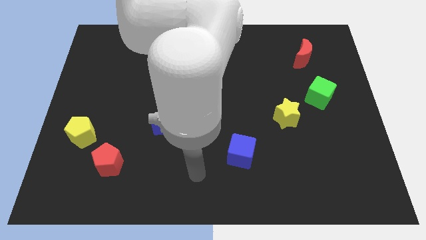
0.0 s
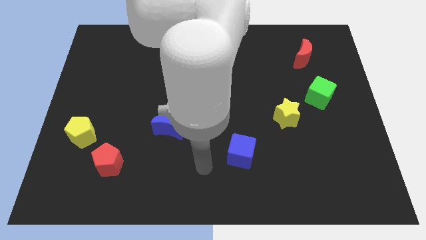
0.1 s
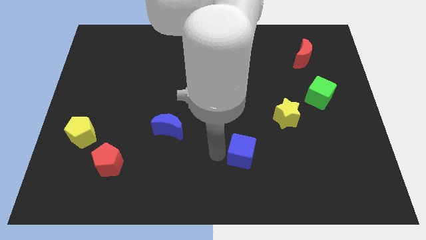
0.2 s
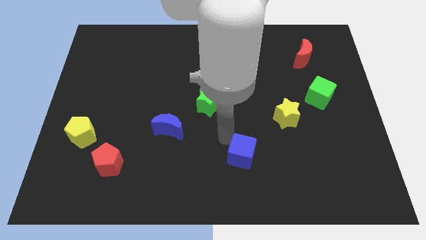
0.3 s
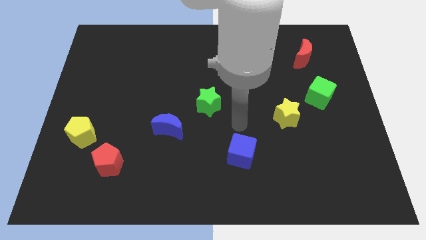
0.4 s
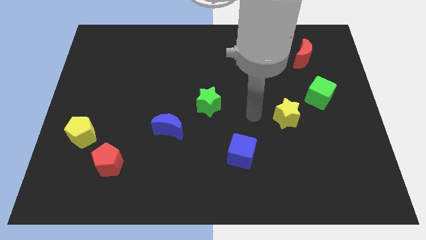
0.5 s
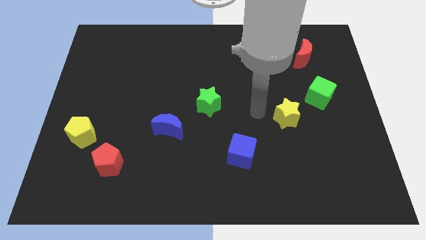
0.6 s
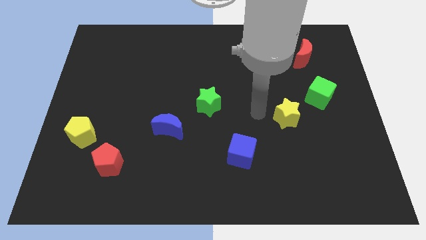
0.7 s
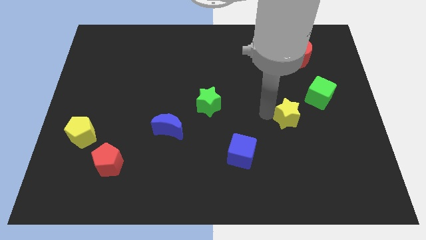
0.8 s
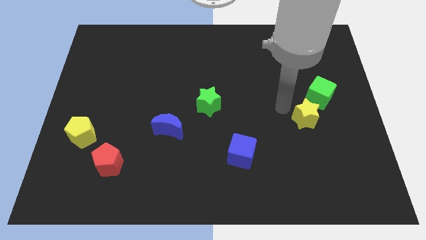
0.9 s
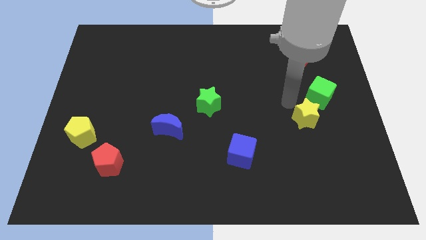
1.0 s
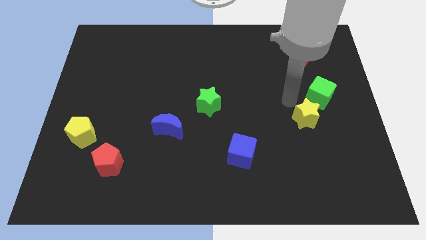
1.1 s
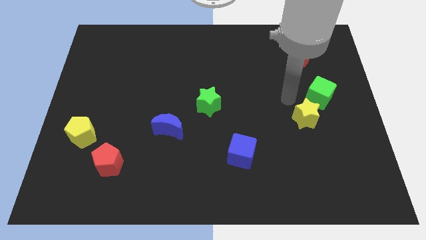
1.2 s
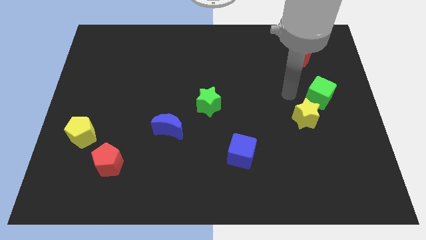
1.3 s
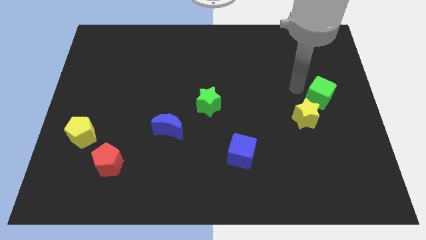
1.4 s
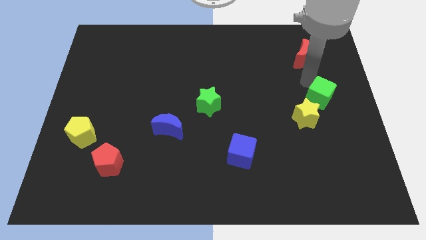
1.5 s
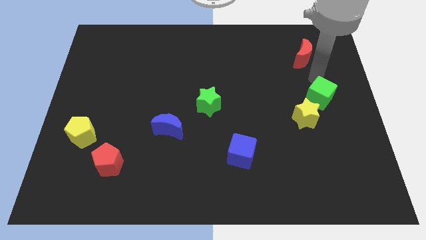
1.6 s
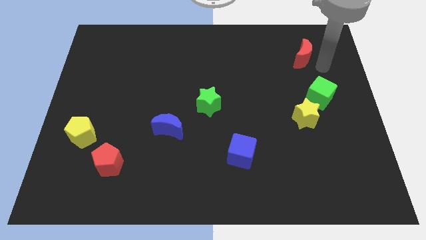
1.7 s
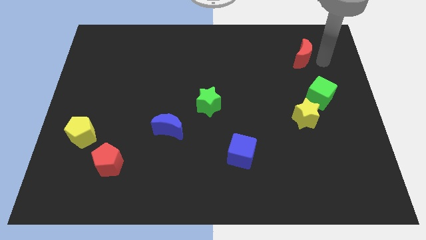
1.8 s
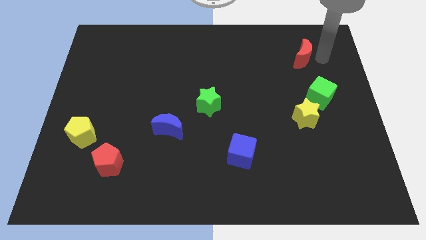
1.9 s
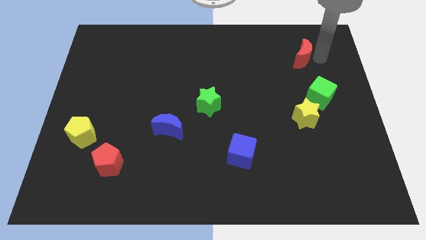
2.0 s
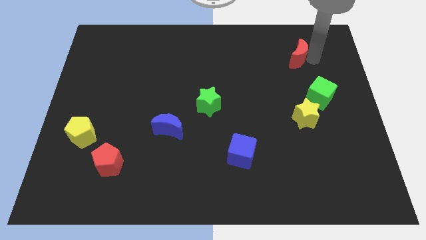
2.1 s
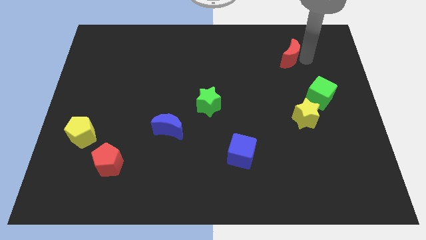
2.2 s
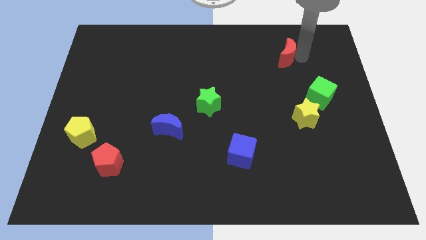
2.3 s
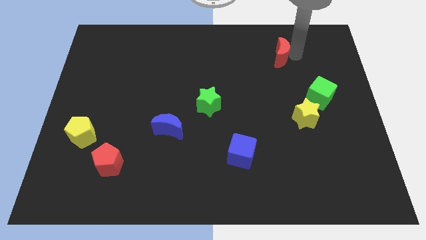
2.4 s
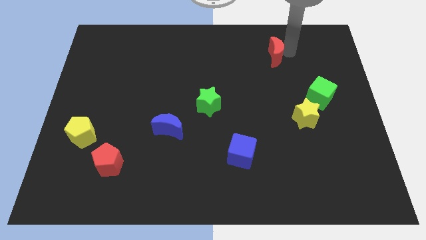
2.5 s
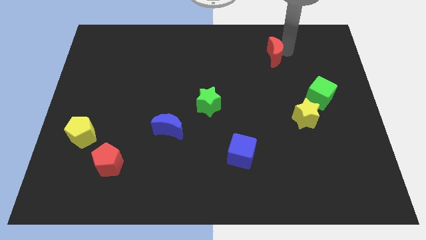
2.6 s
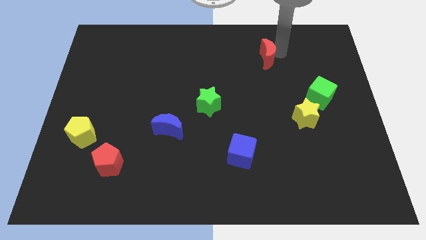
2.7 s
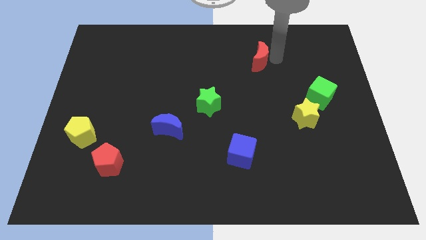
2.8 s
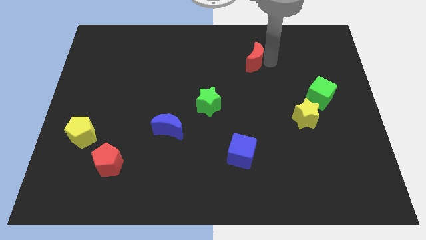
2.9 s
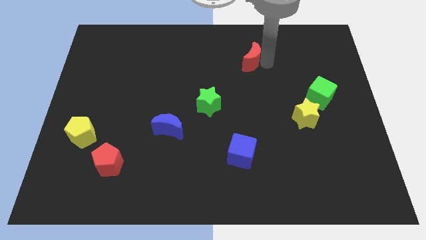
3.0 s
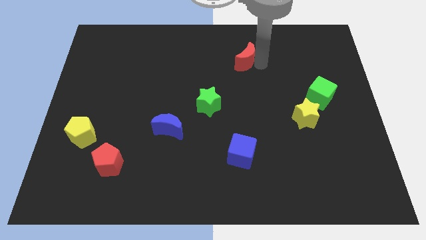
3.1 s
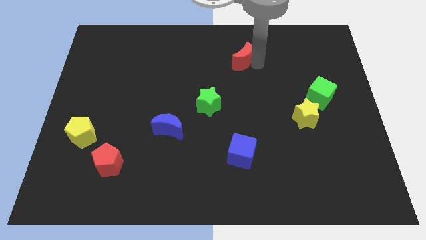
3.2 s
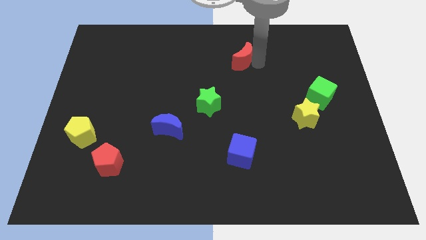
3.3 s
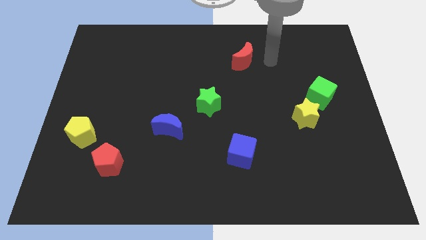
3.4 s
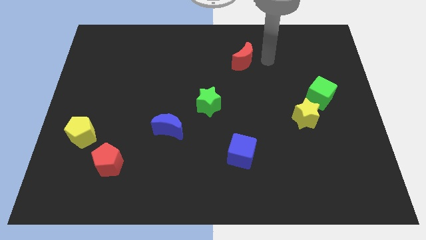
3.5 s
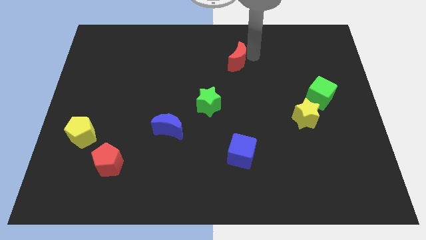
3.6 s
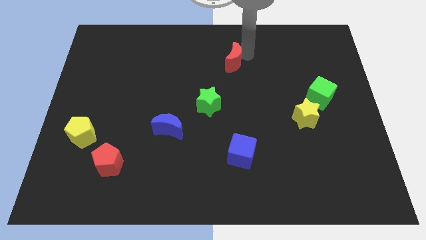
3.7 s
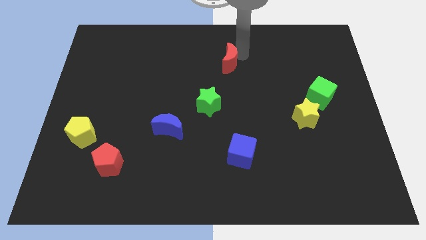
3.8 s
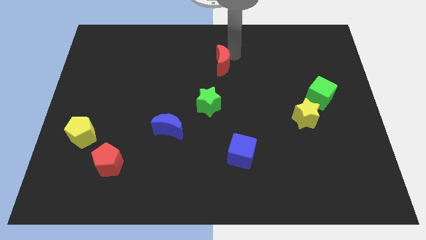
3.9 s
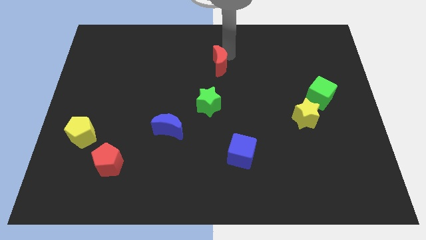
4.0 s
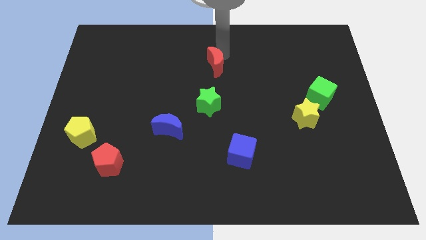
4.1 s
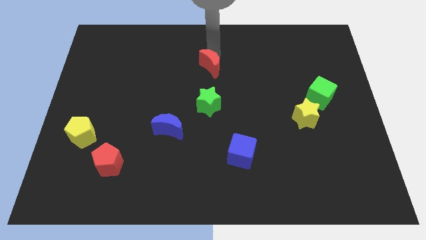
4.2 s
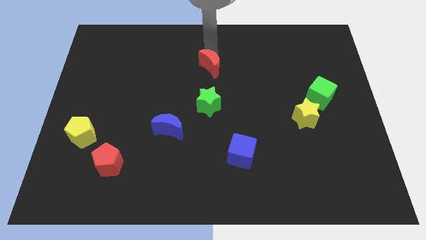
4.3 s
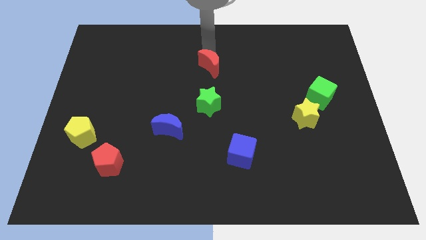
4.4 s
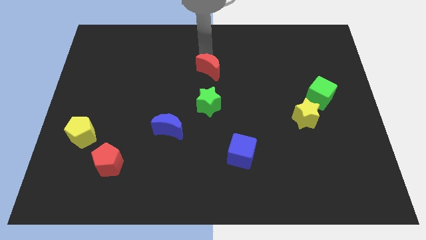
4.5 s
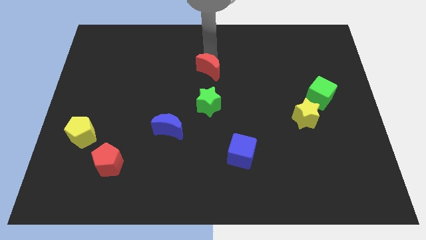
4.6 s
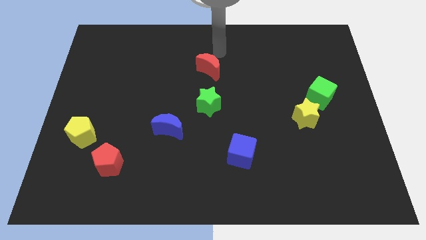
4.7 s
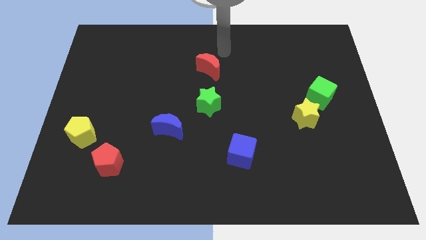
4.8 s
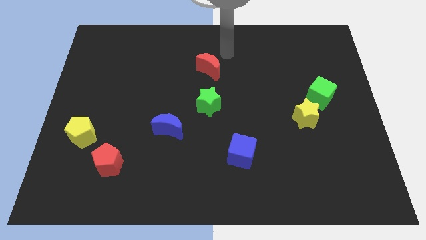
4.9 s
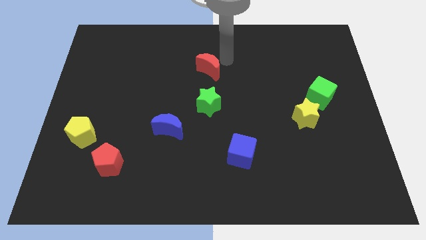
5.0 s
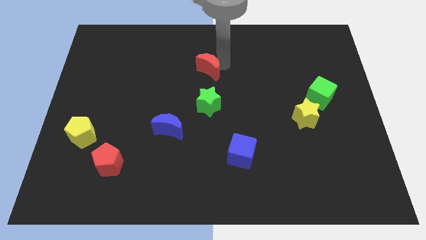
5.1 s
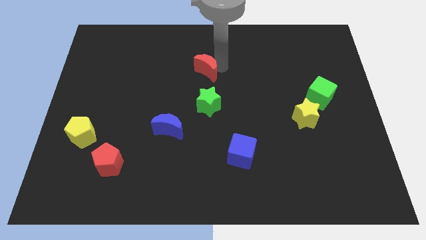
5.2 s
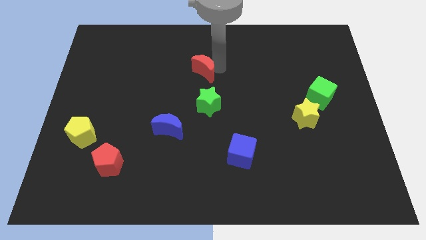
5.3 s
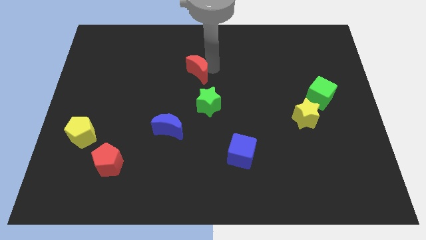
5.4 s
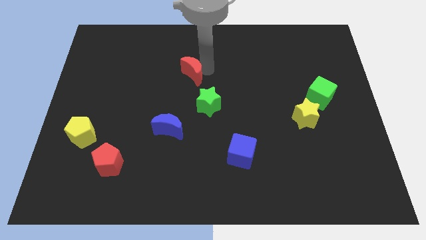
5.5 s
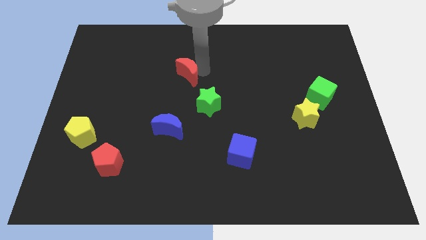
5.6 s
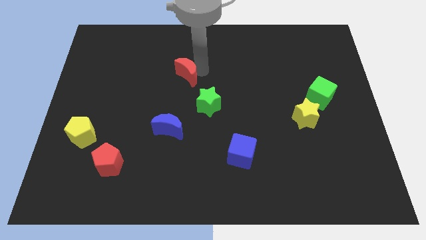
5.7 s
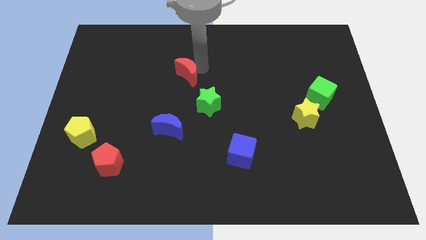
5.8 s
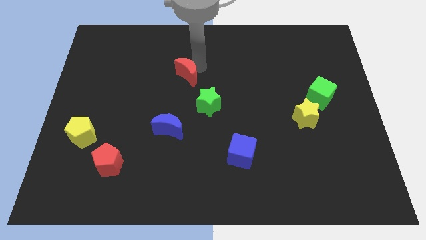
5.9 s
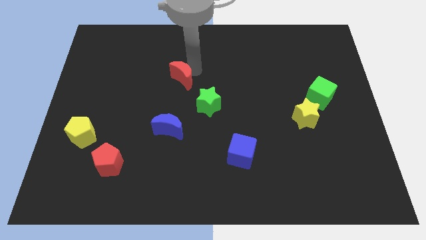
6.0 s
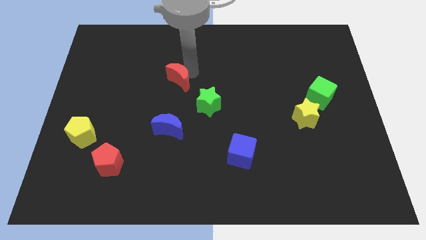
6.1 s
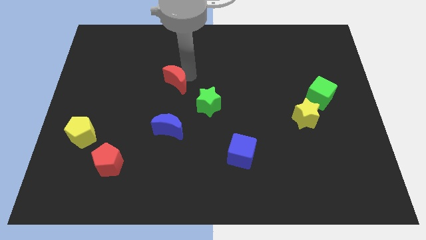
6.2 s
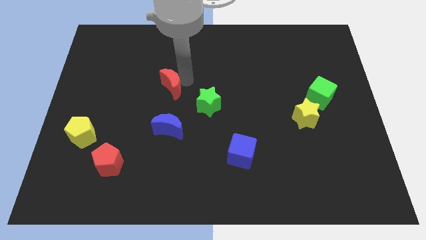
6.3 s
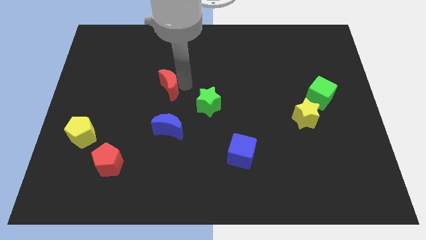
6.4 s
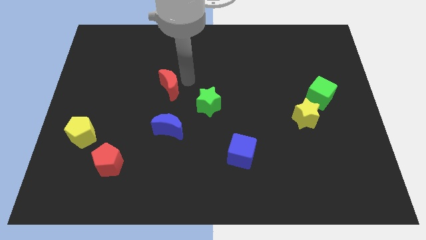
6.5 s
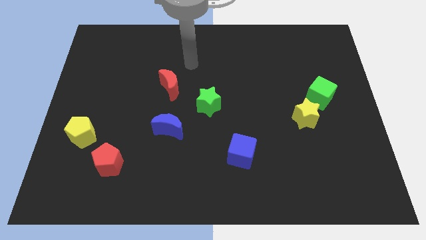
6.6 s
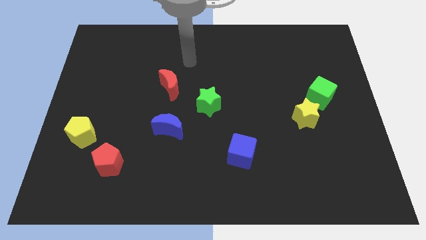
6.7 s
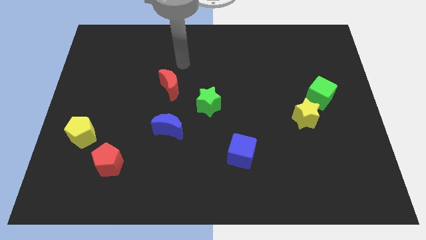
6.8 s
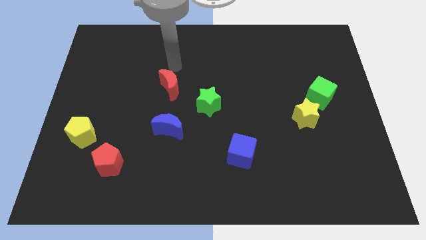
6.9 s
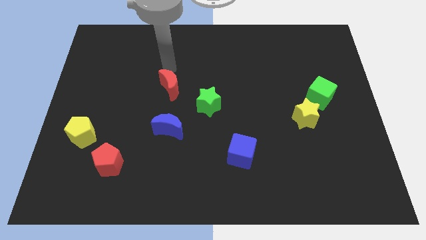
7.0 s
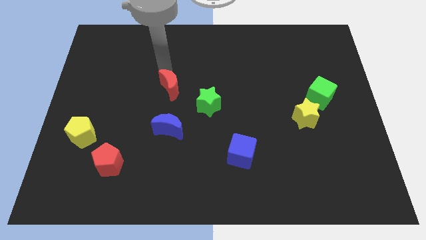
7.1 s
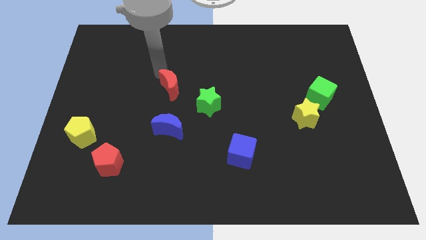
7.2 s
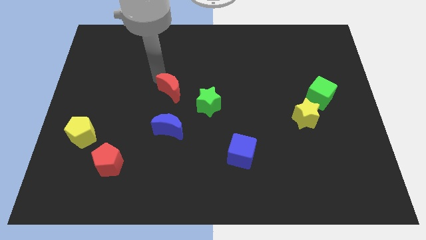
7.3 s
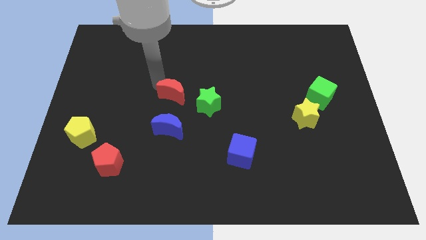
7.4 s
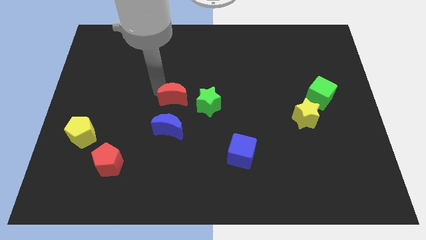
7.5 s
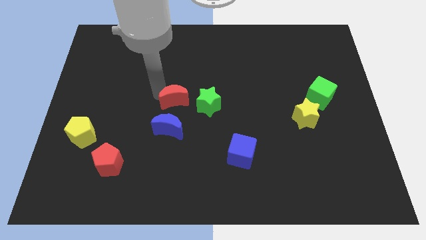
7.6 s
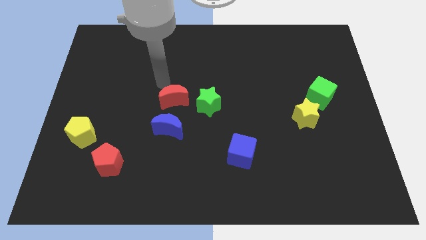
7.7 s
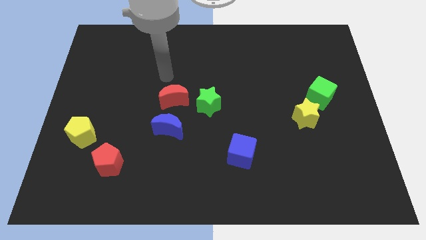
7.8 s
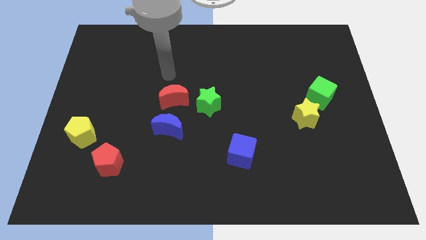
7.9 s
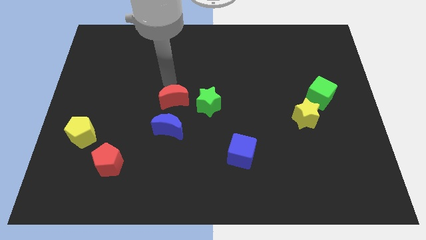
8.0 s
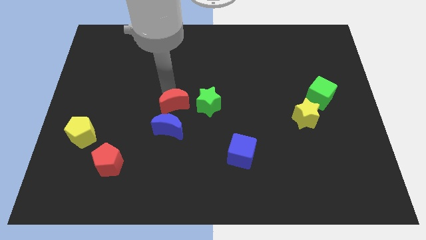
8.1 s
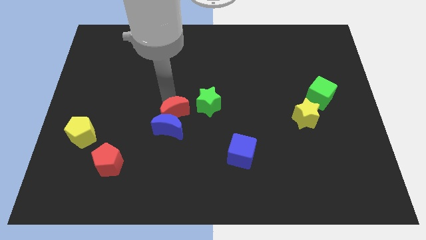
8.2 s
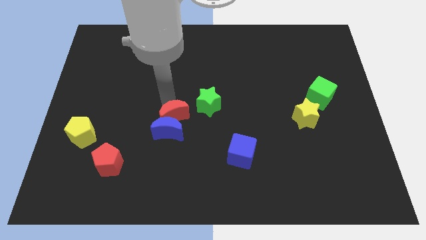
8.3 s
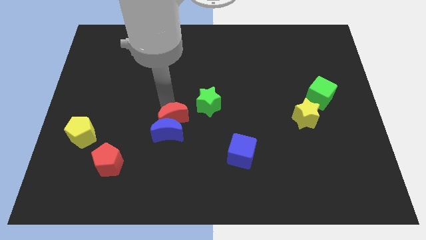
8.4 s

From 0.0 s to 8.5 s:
slide the red moon next to the blue moon
